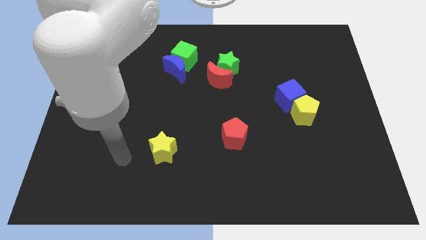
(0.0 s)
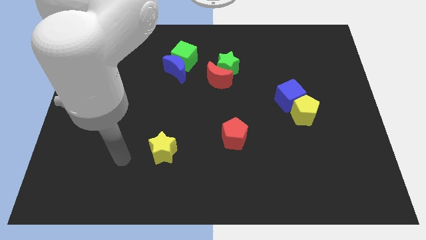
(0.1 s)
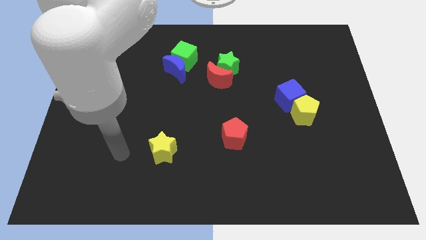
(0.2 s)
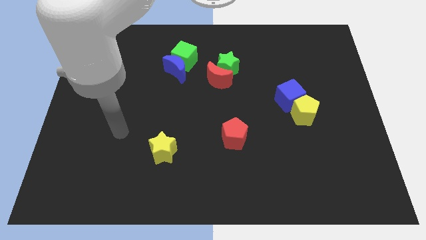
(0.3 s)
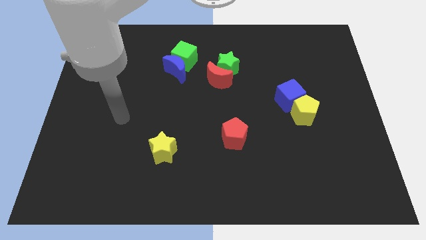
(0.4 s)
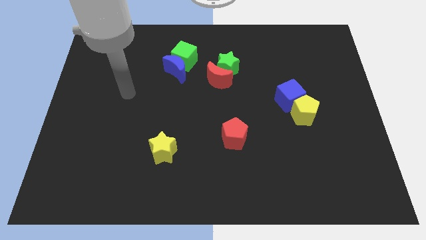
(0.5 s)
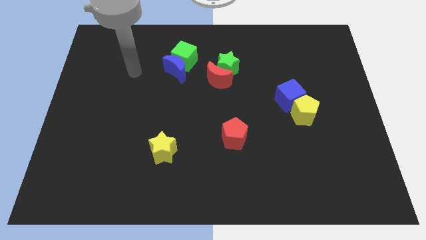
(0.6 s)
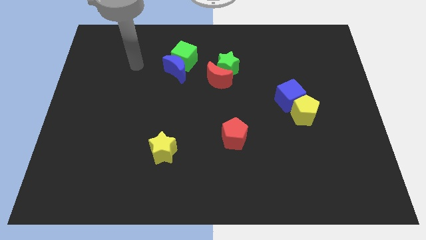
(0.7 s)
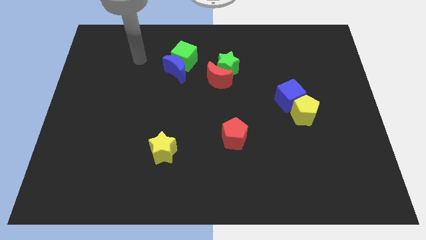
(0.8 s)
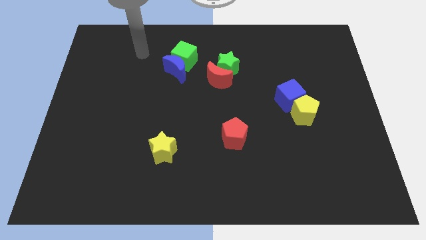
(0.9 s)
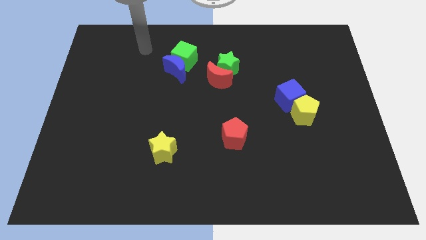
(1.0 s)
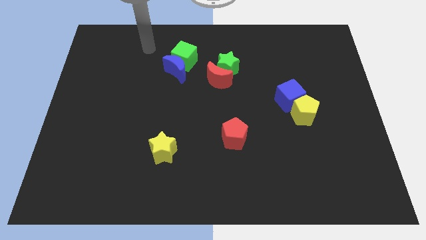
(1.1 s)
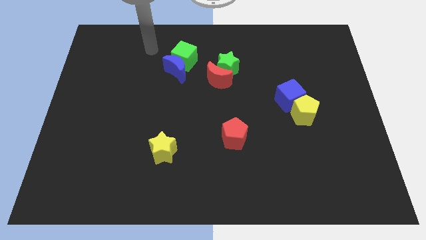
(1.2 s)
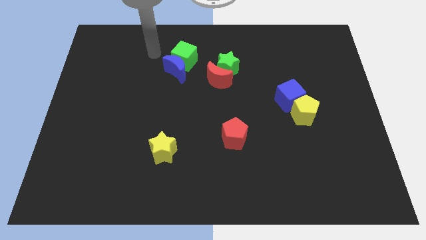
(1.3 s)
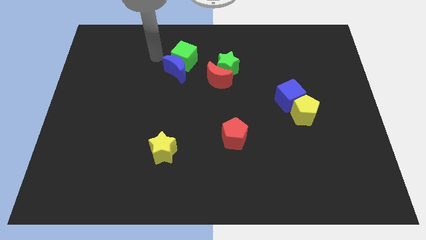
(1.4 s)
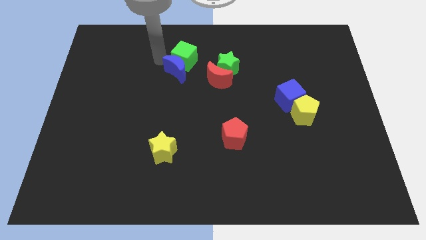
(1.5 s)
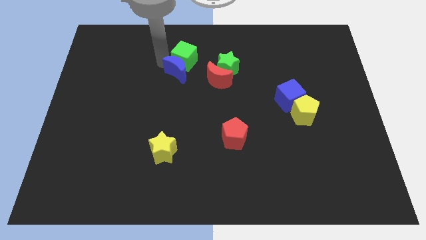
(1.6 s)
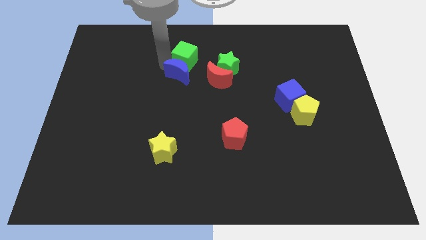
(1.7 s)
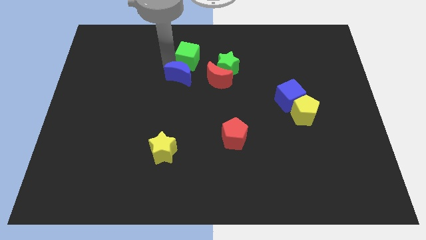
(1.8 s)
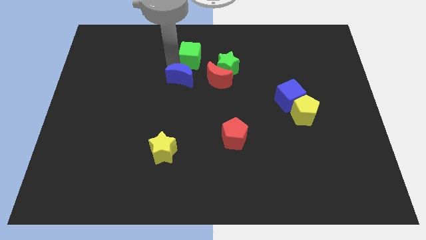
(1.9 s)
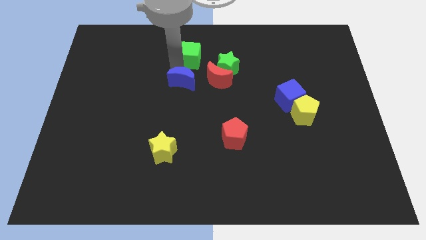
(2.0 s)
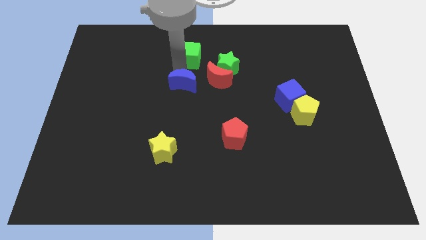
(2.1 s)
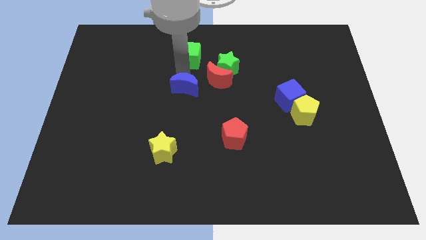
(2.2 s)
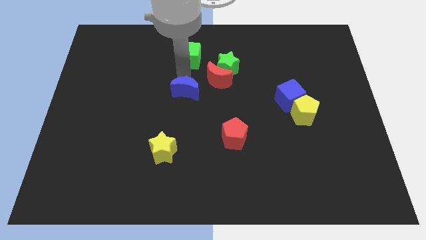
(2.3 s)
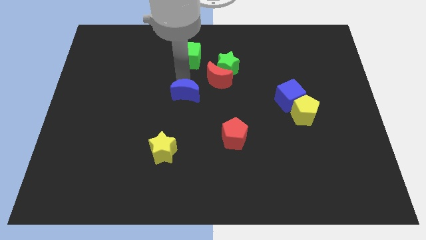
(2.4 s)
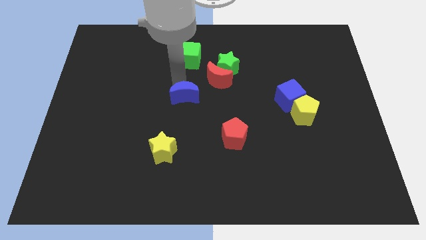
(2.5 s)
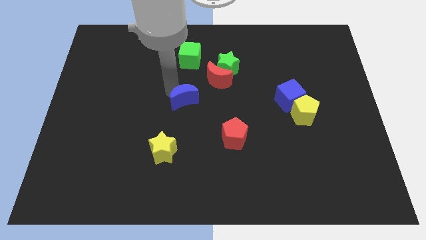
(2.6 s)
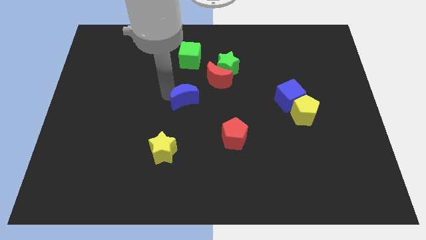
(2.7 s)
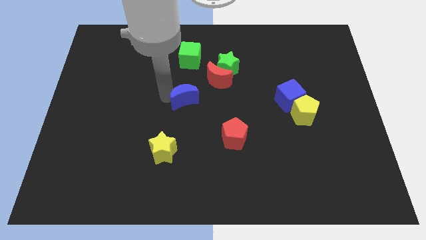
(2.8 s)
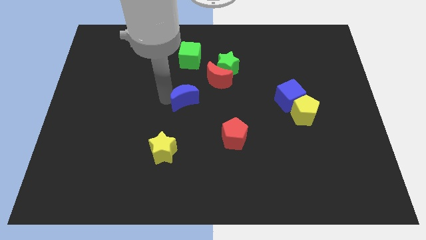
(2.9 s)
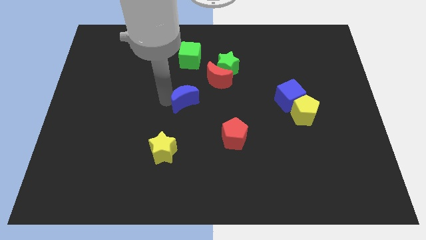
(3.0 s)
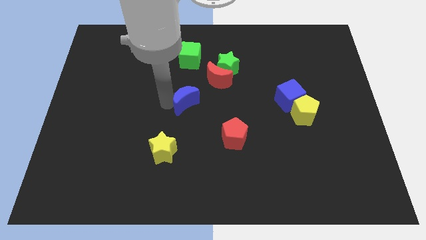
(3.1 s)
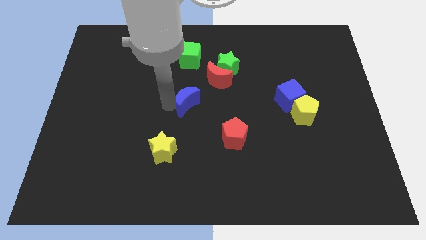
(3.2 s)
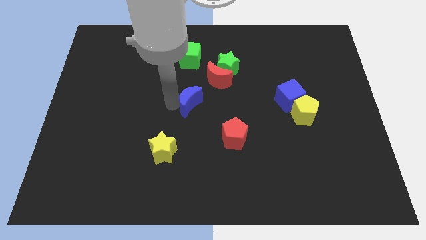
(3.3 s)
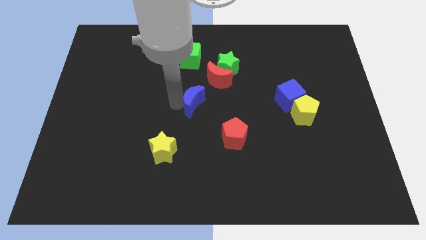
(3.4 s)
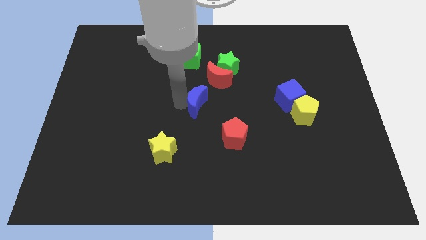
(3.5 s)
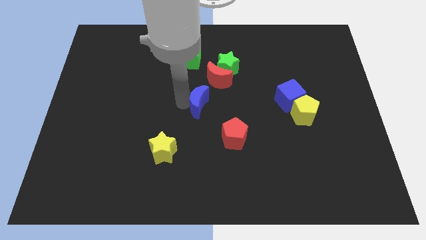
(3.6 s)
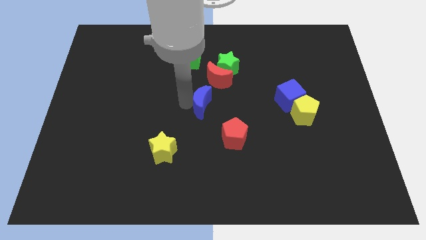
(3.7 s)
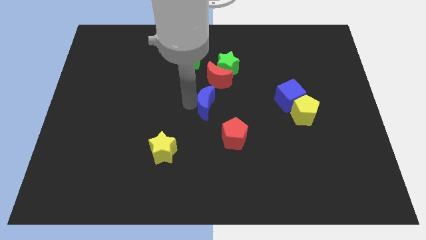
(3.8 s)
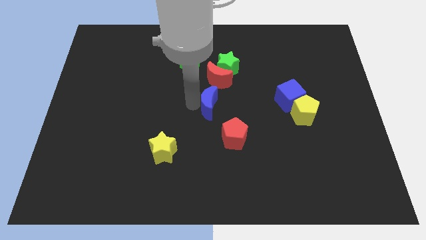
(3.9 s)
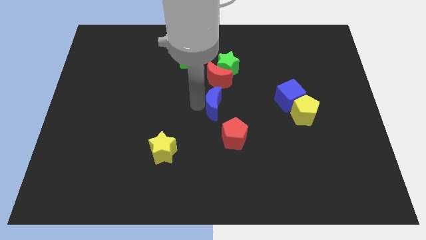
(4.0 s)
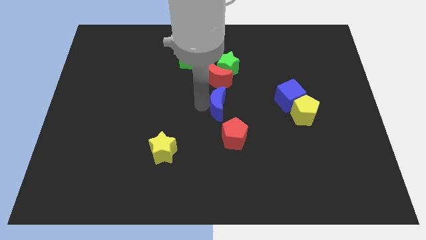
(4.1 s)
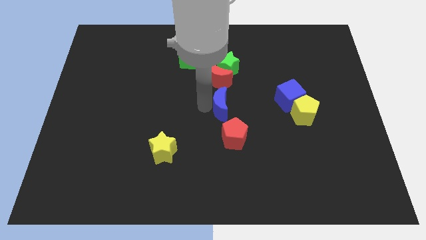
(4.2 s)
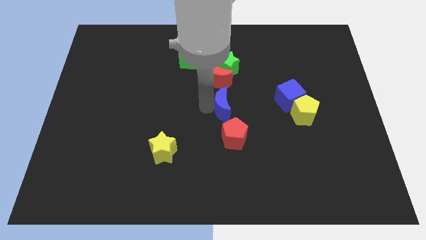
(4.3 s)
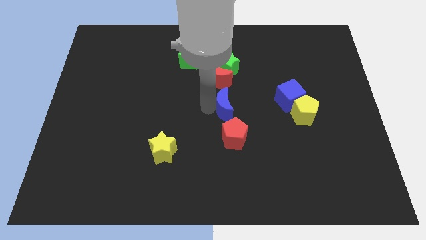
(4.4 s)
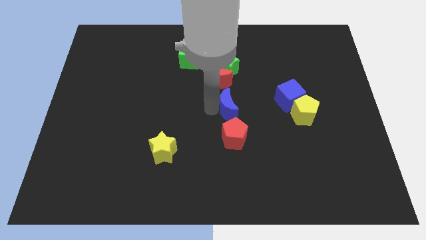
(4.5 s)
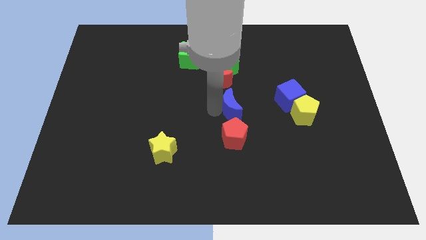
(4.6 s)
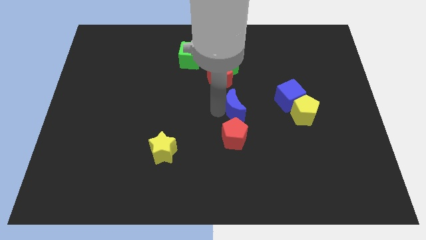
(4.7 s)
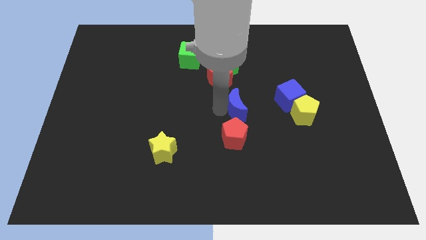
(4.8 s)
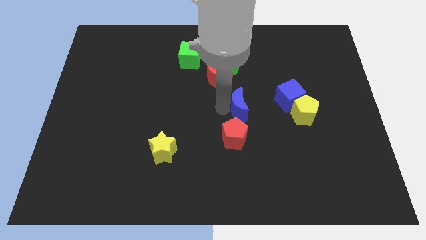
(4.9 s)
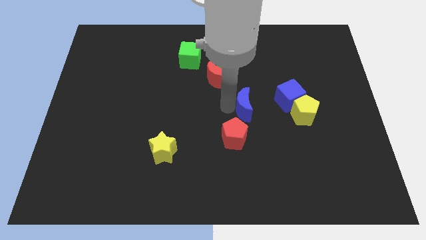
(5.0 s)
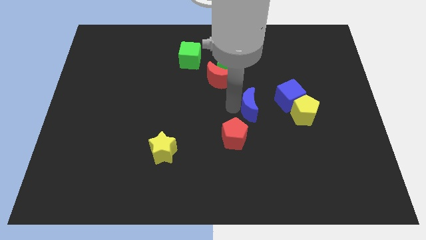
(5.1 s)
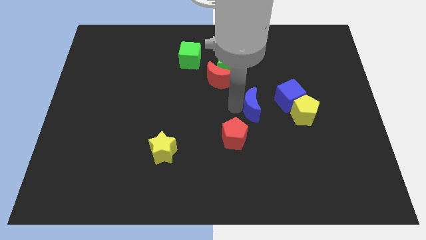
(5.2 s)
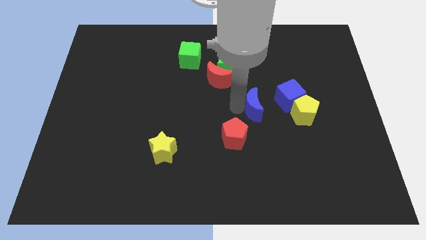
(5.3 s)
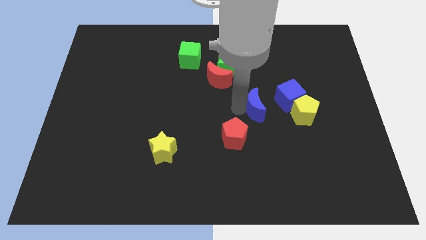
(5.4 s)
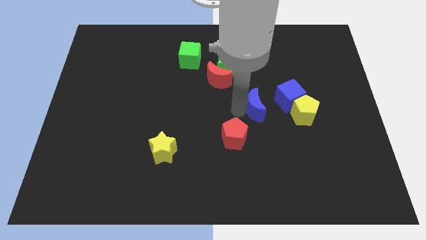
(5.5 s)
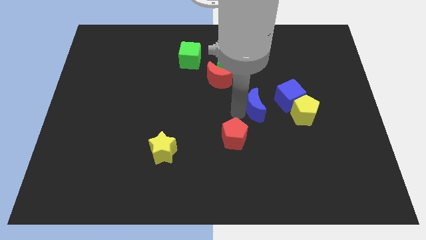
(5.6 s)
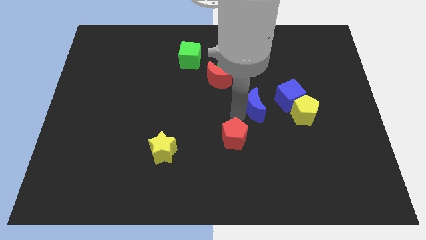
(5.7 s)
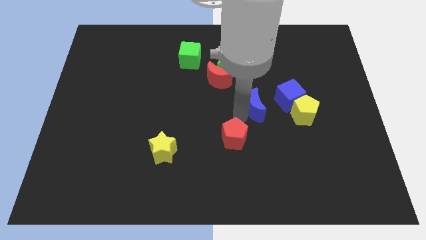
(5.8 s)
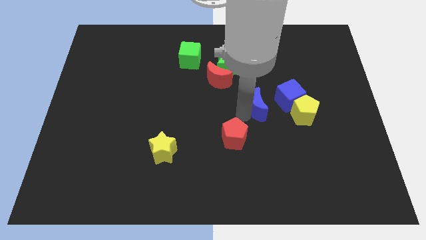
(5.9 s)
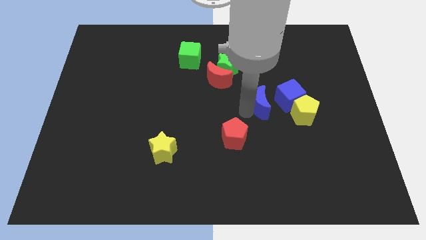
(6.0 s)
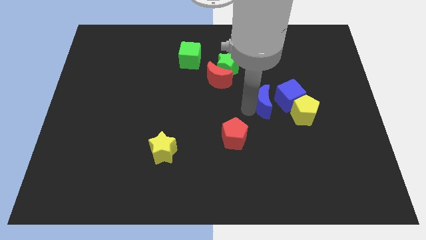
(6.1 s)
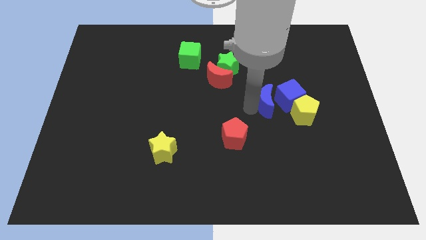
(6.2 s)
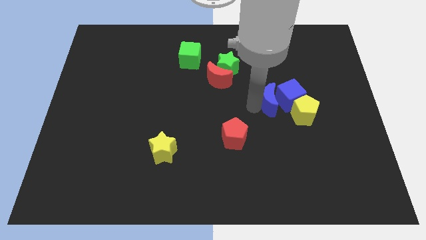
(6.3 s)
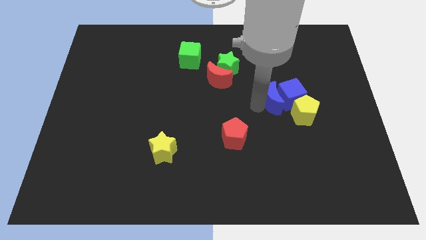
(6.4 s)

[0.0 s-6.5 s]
push the blue moon towards the blue cube

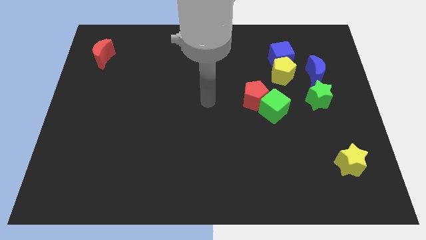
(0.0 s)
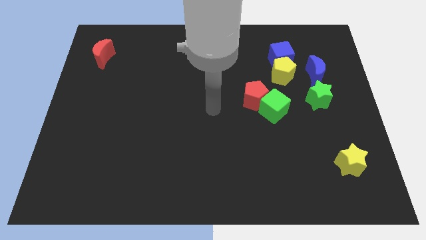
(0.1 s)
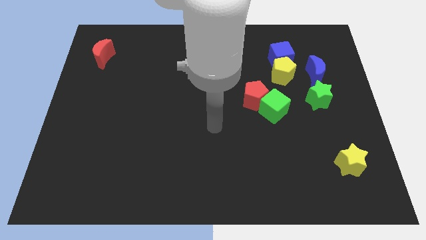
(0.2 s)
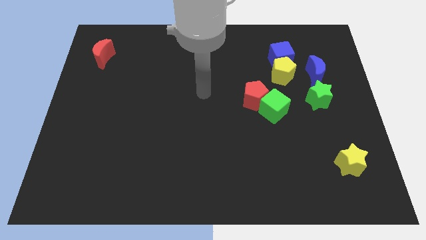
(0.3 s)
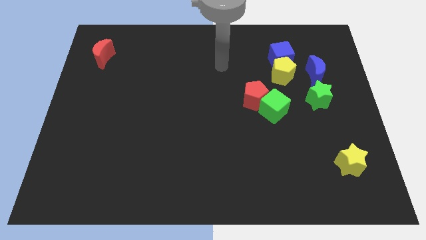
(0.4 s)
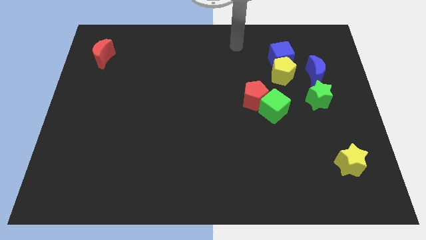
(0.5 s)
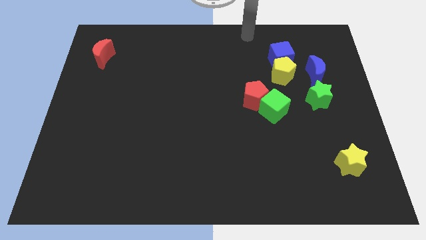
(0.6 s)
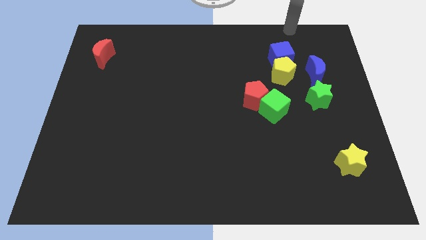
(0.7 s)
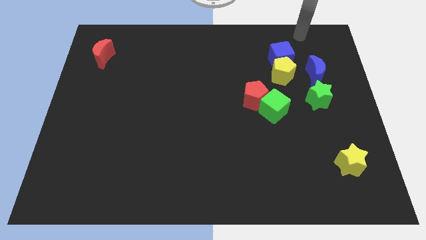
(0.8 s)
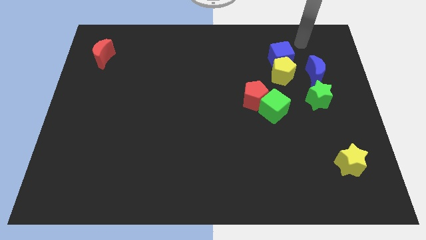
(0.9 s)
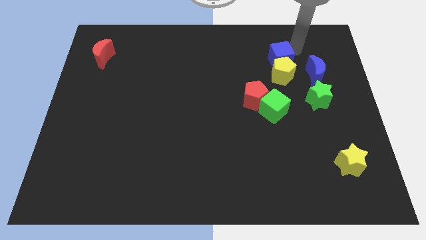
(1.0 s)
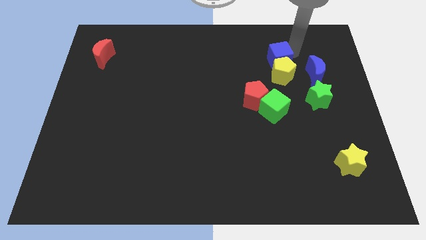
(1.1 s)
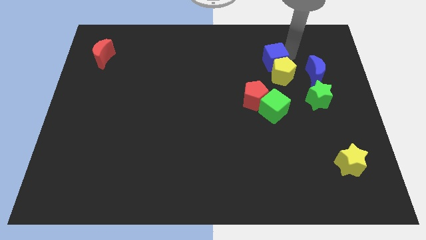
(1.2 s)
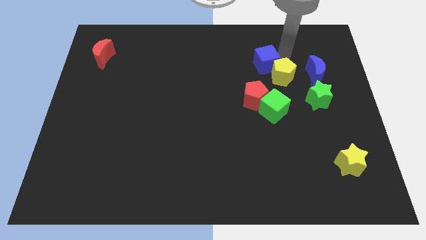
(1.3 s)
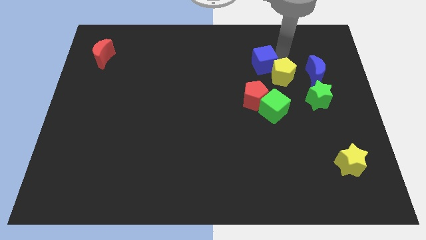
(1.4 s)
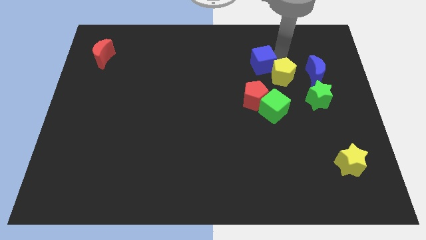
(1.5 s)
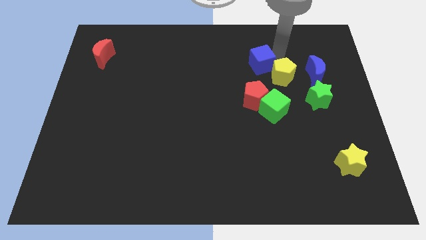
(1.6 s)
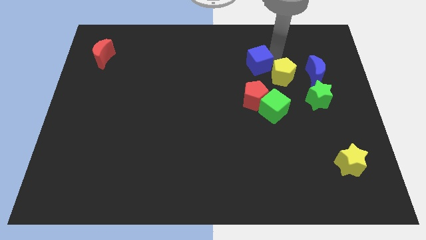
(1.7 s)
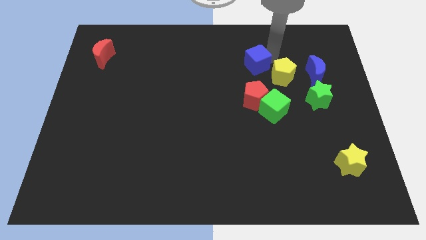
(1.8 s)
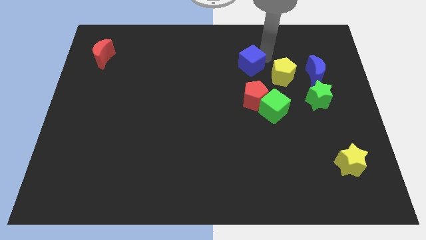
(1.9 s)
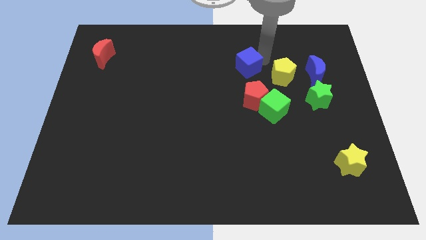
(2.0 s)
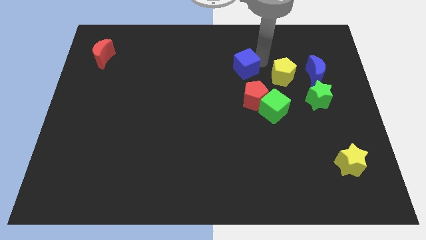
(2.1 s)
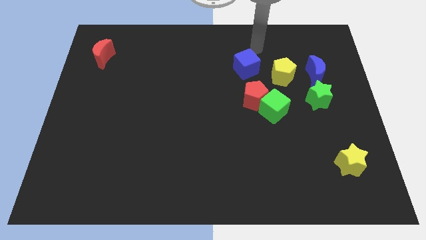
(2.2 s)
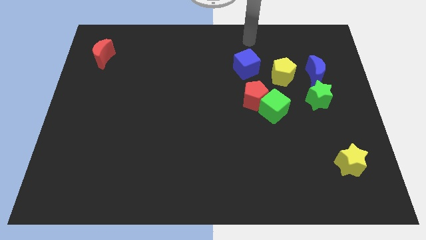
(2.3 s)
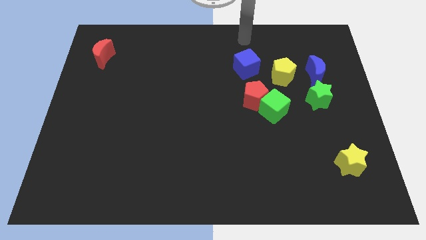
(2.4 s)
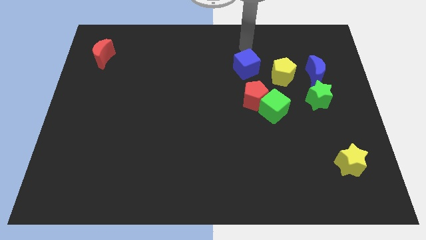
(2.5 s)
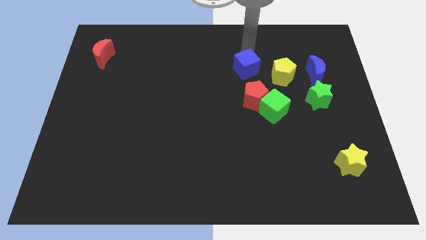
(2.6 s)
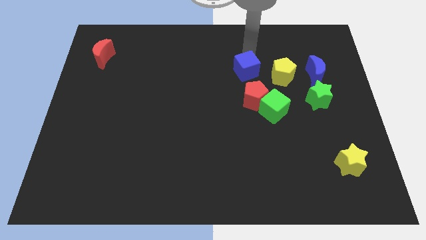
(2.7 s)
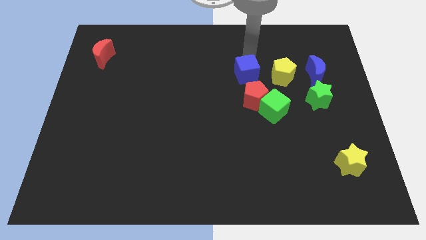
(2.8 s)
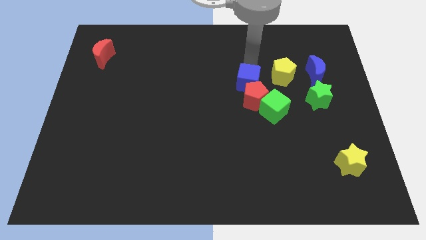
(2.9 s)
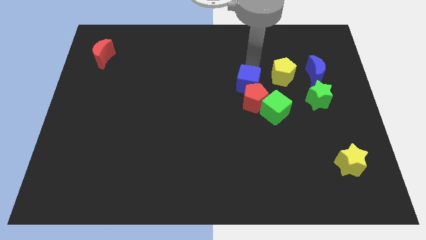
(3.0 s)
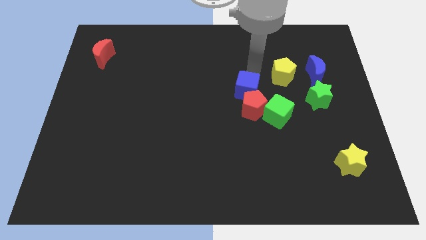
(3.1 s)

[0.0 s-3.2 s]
push the blue cube next to the red pentagon
